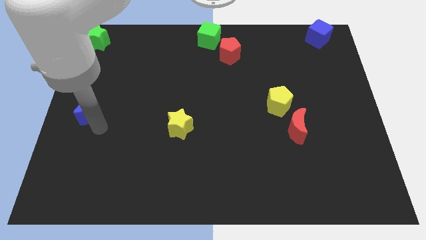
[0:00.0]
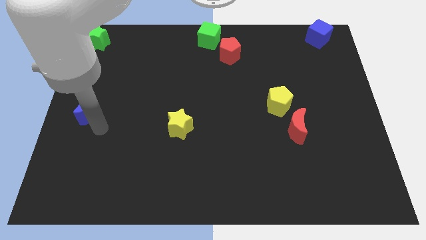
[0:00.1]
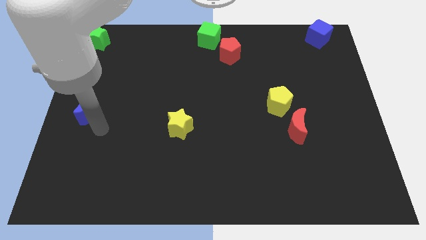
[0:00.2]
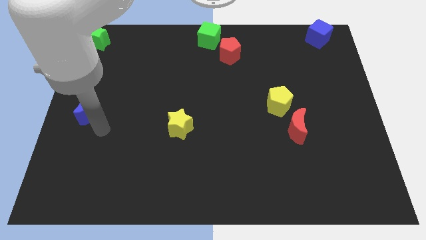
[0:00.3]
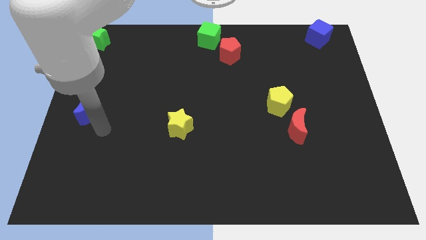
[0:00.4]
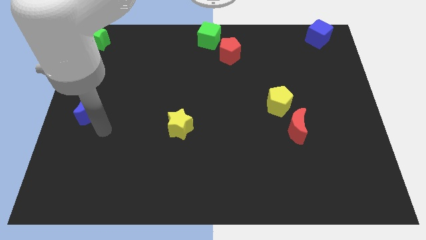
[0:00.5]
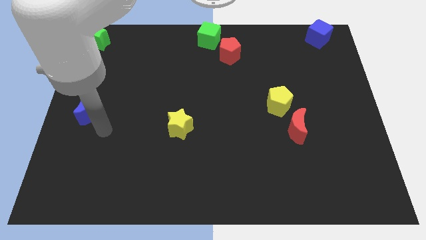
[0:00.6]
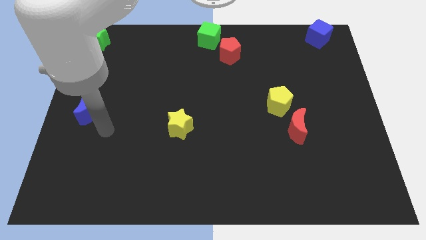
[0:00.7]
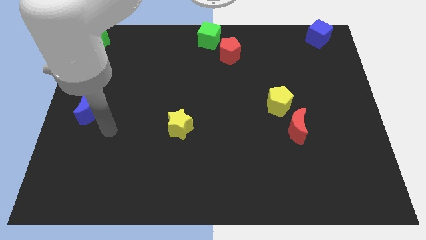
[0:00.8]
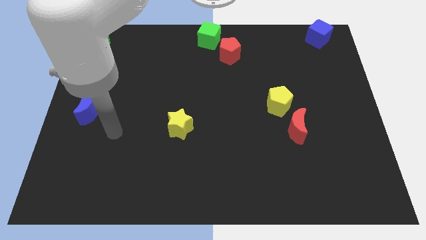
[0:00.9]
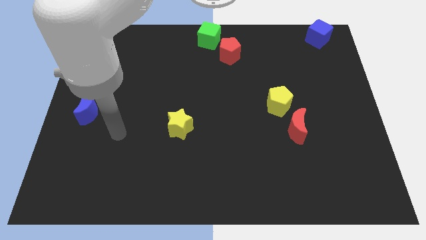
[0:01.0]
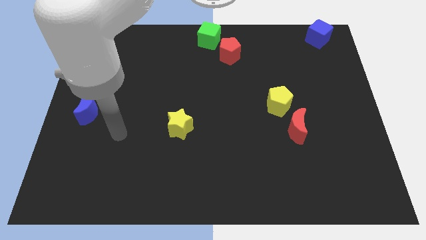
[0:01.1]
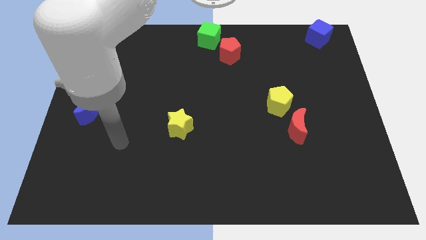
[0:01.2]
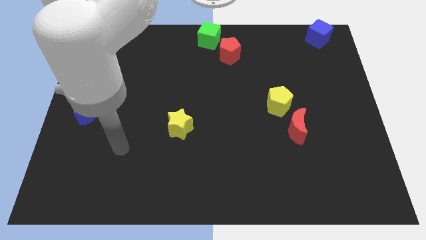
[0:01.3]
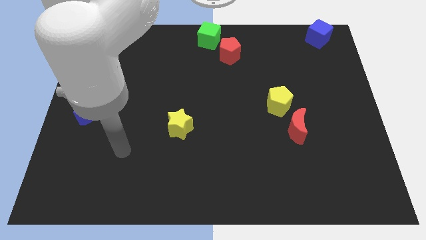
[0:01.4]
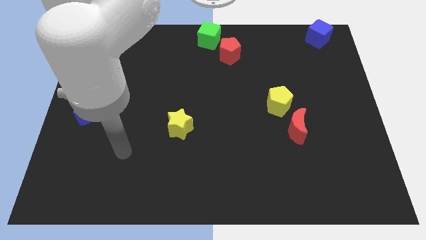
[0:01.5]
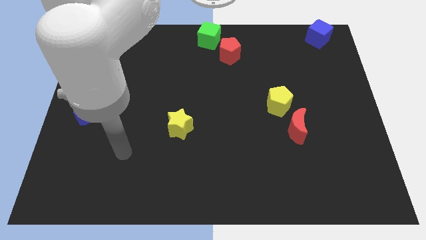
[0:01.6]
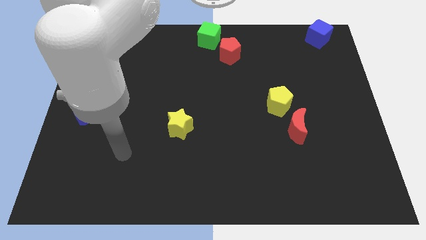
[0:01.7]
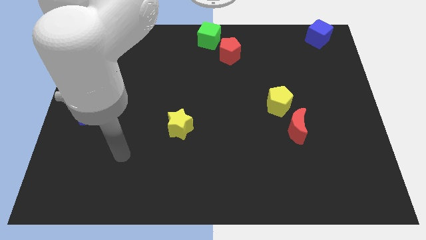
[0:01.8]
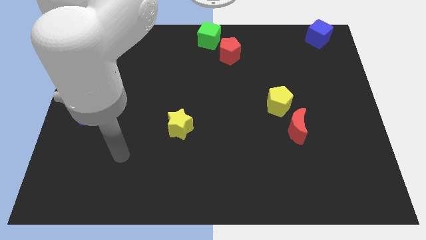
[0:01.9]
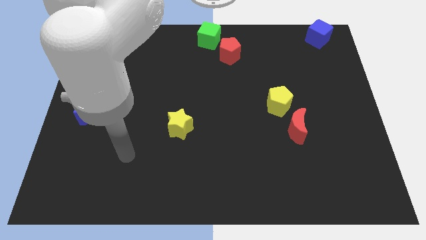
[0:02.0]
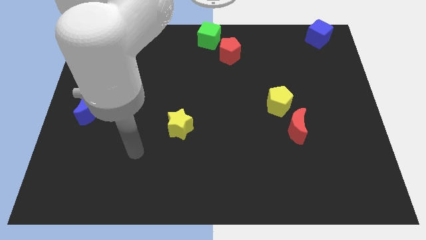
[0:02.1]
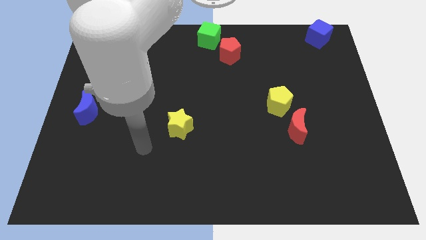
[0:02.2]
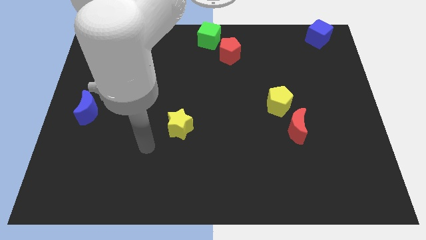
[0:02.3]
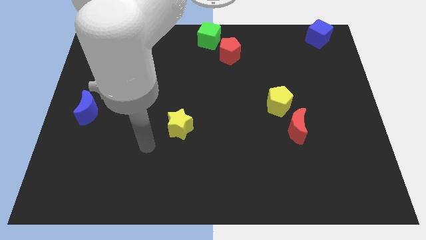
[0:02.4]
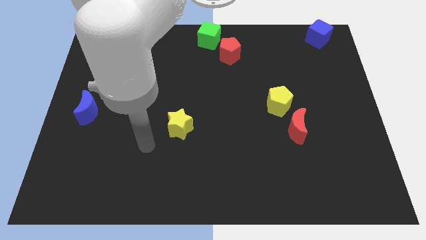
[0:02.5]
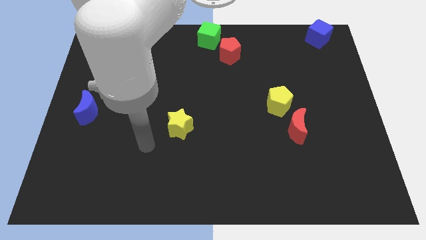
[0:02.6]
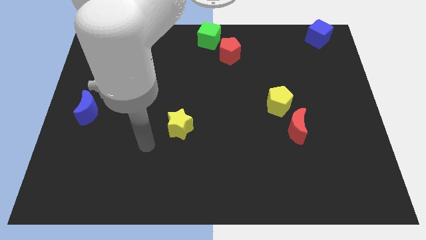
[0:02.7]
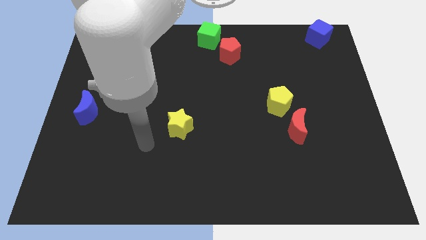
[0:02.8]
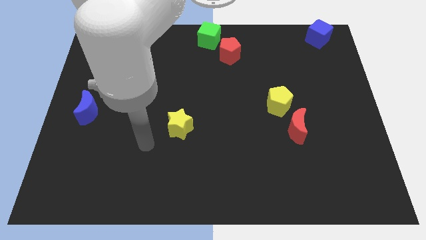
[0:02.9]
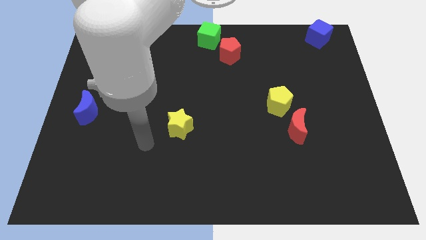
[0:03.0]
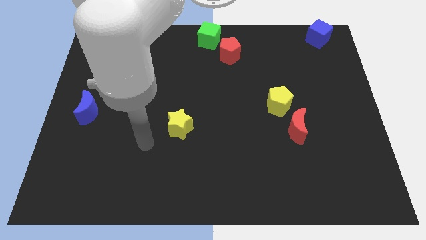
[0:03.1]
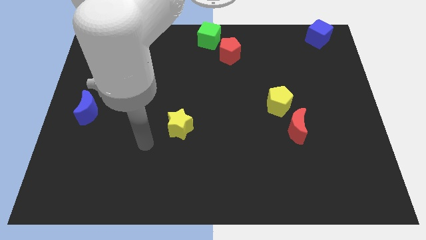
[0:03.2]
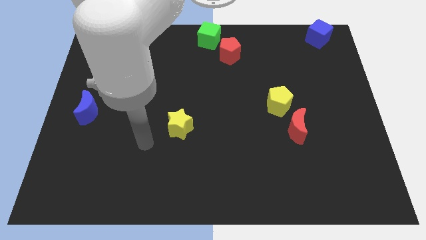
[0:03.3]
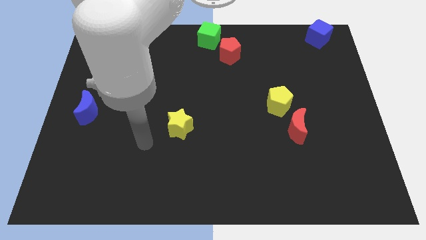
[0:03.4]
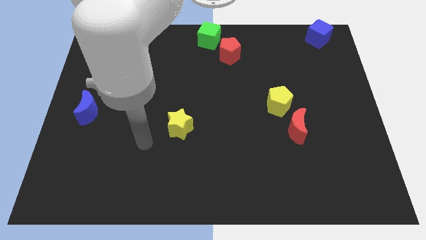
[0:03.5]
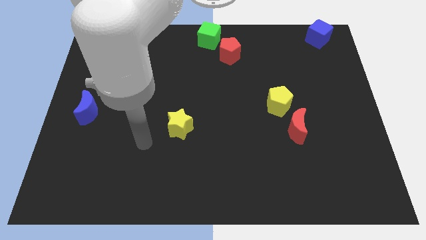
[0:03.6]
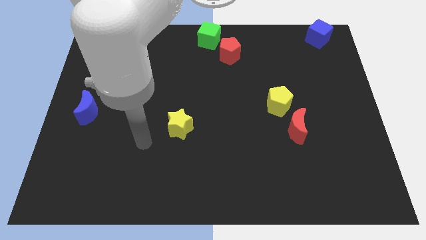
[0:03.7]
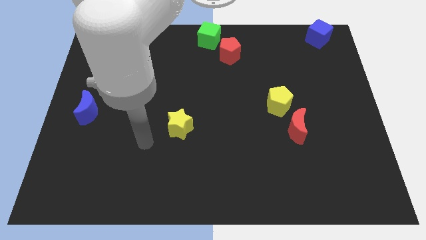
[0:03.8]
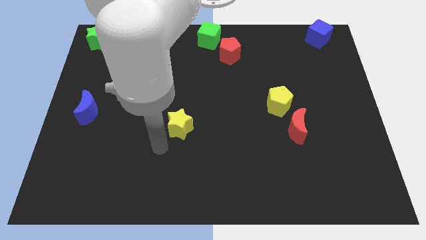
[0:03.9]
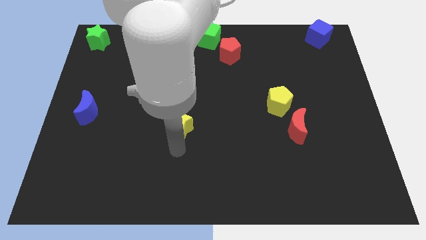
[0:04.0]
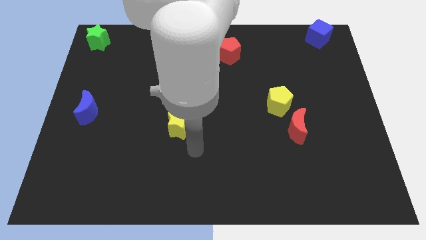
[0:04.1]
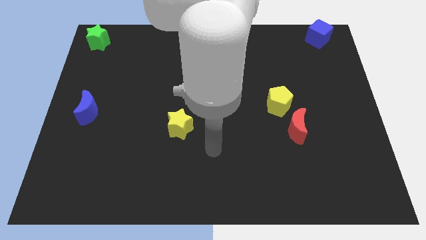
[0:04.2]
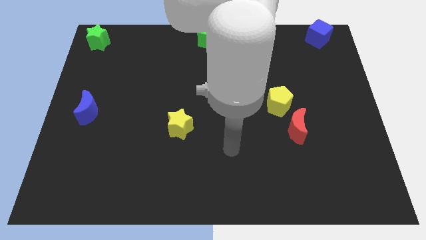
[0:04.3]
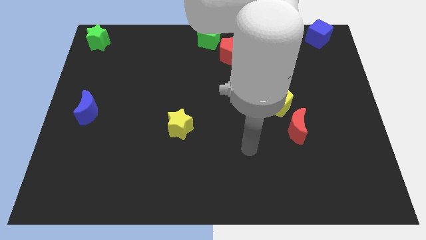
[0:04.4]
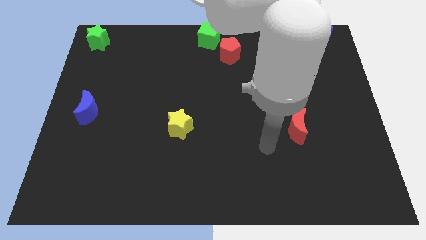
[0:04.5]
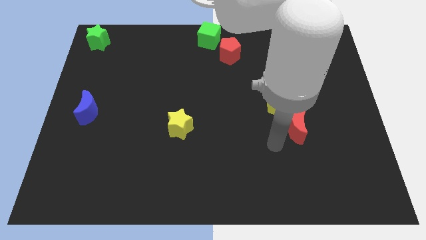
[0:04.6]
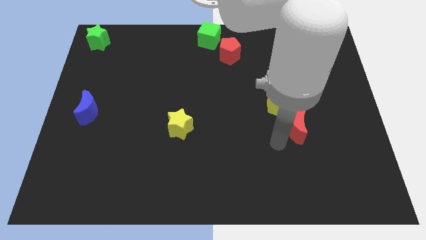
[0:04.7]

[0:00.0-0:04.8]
move your arm to the bottom of red crescent

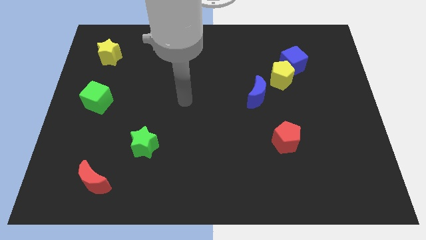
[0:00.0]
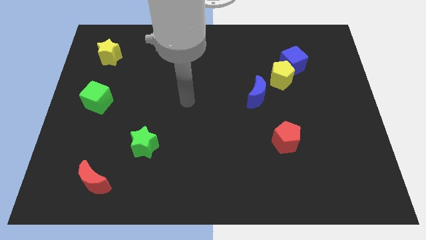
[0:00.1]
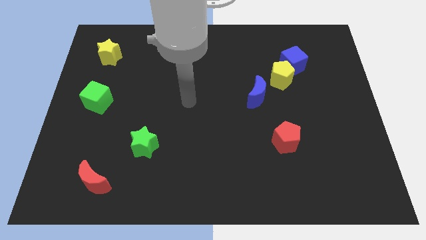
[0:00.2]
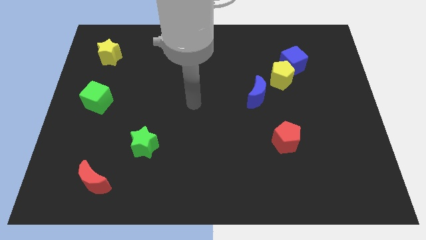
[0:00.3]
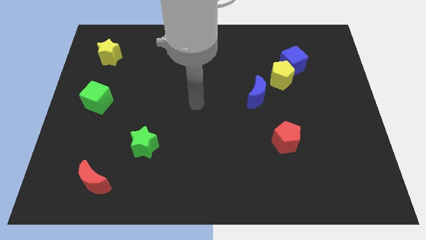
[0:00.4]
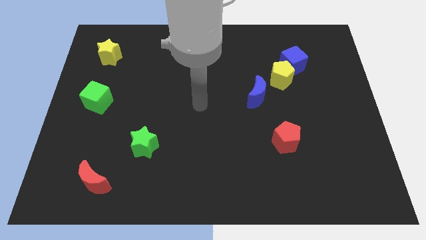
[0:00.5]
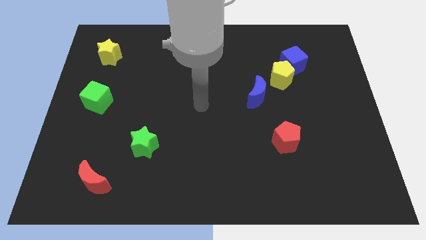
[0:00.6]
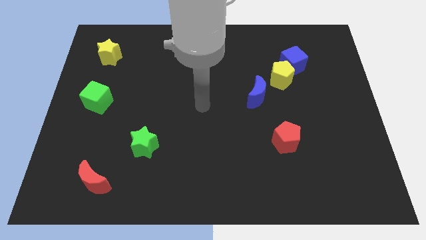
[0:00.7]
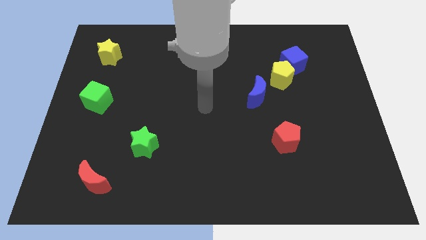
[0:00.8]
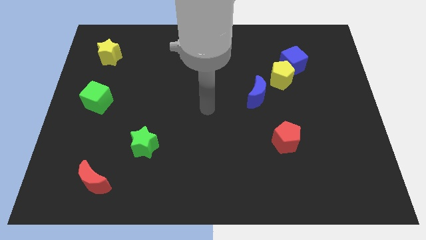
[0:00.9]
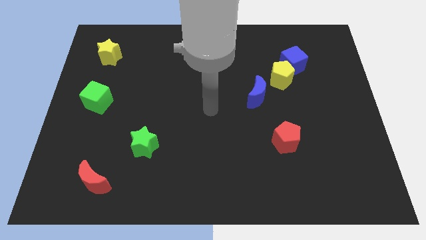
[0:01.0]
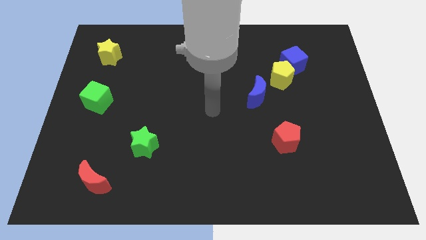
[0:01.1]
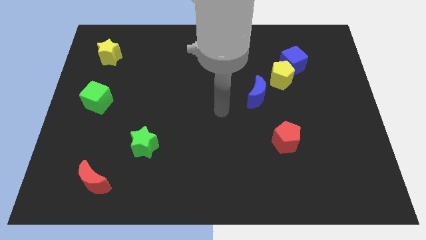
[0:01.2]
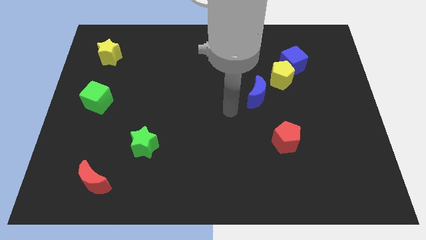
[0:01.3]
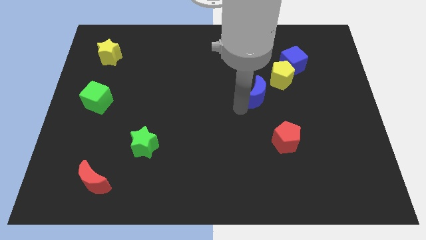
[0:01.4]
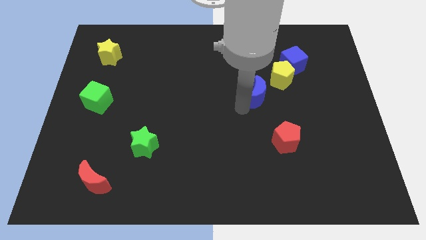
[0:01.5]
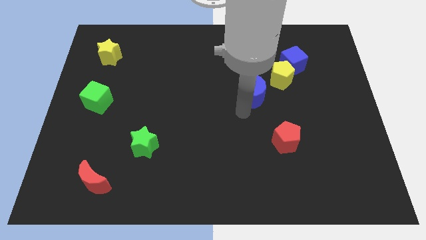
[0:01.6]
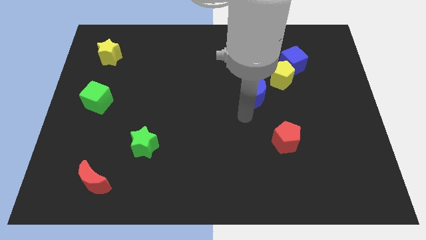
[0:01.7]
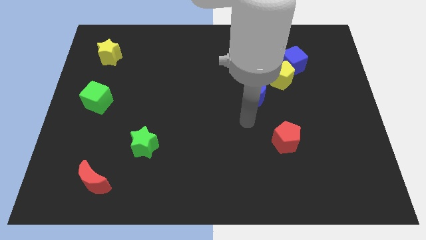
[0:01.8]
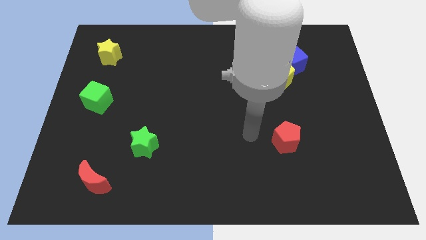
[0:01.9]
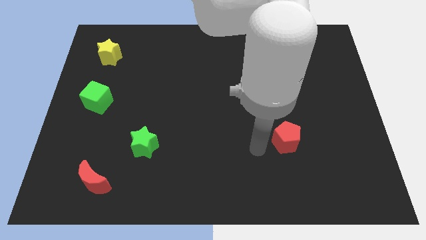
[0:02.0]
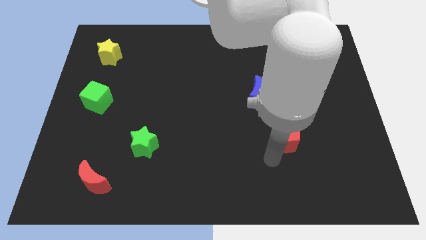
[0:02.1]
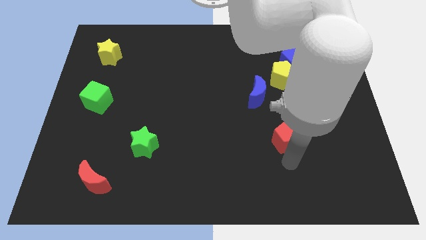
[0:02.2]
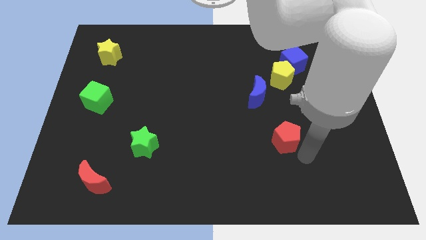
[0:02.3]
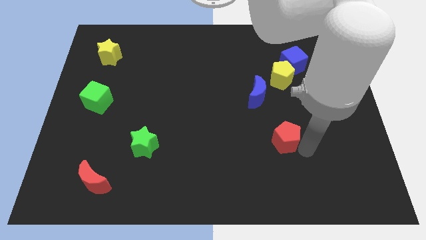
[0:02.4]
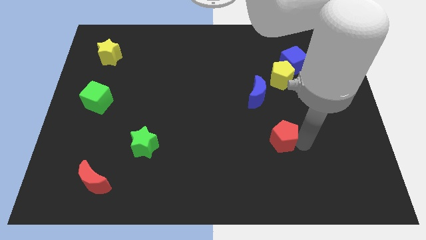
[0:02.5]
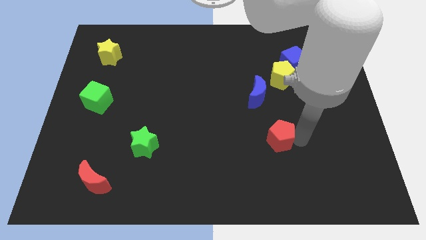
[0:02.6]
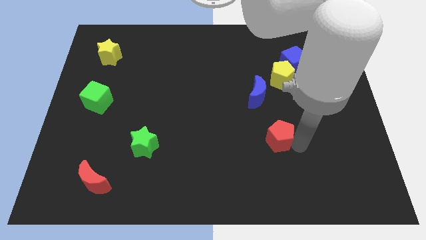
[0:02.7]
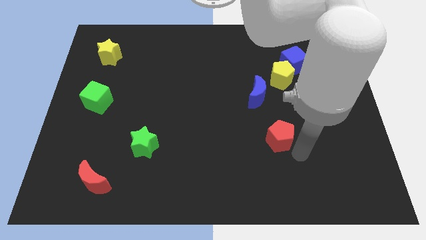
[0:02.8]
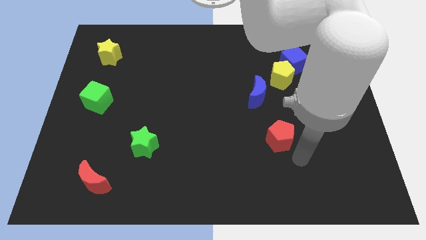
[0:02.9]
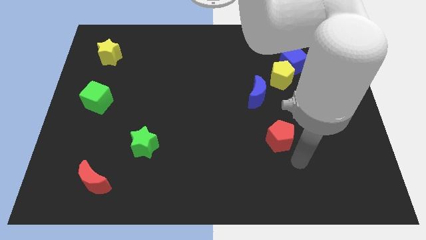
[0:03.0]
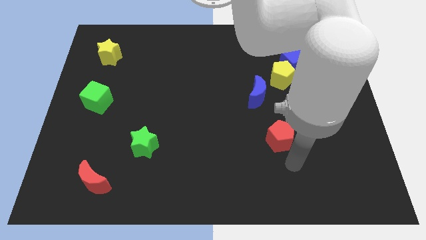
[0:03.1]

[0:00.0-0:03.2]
slightly move the red pentagon upwards of the board

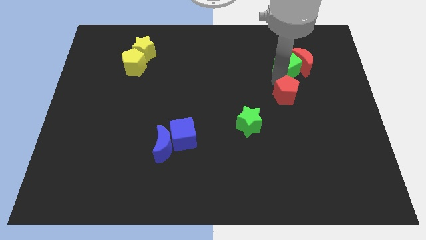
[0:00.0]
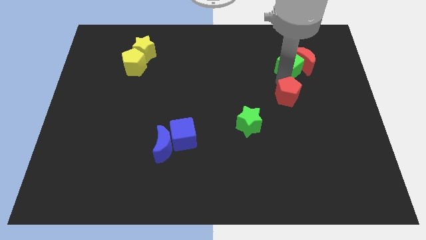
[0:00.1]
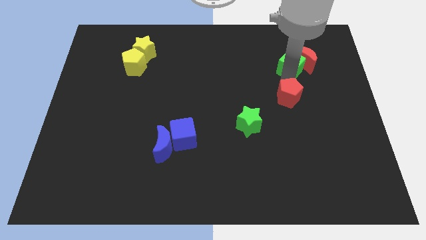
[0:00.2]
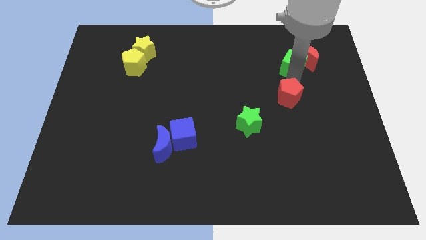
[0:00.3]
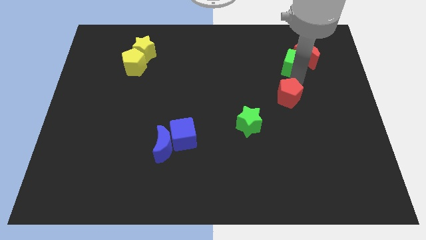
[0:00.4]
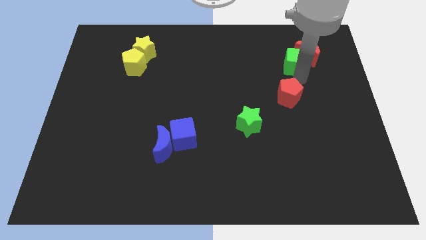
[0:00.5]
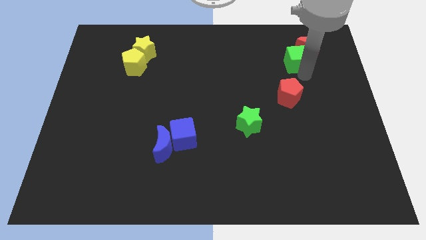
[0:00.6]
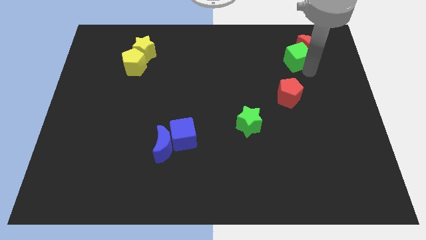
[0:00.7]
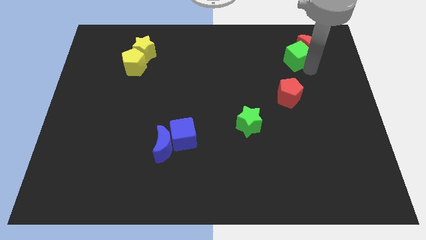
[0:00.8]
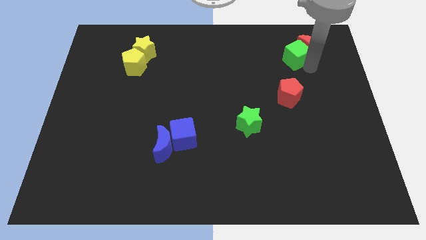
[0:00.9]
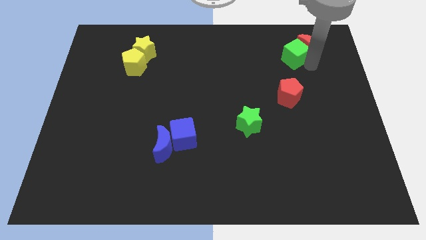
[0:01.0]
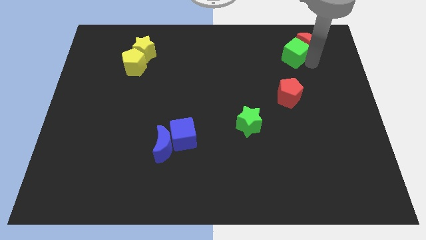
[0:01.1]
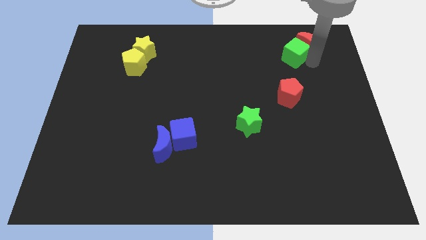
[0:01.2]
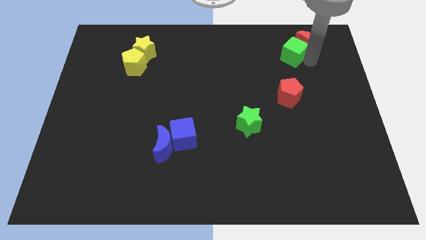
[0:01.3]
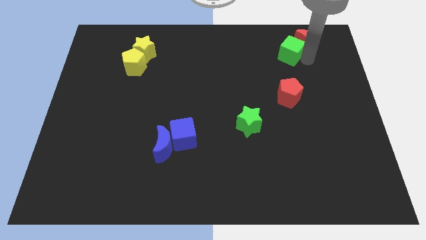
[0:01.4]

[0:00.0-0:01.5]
separate red crescent and green cube from the red pentagon
